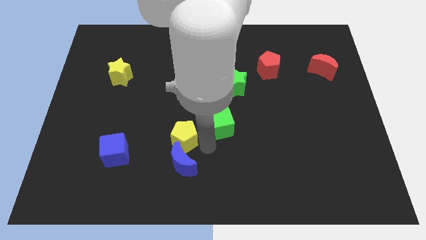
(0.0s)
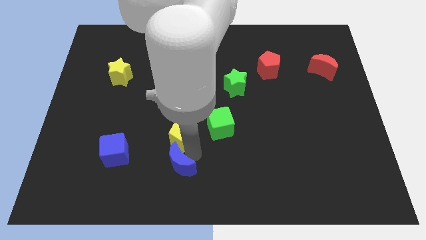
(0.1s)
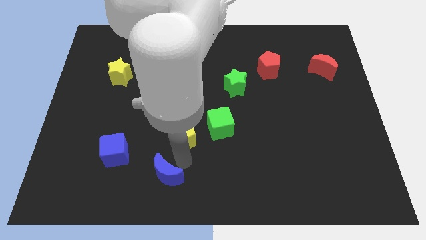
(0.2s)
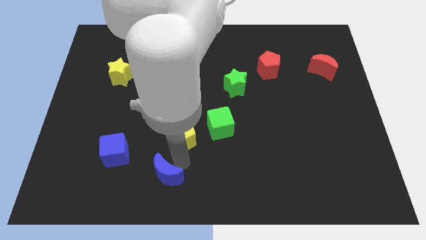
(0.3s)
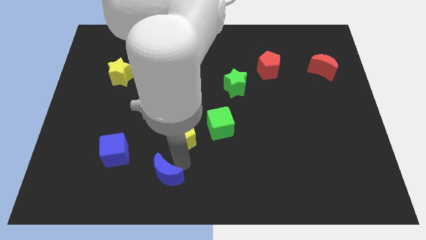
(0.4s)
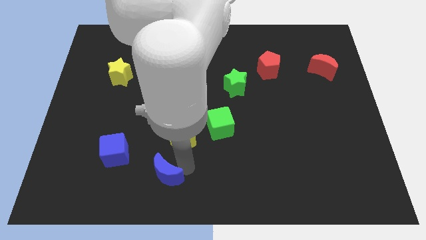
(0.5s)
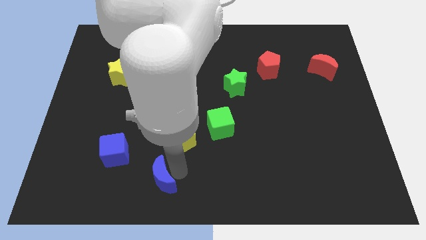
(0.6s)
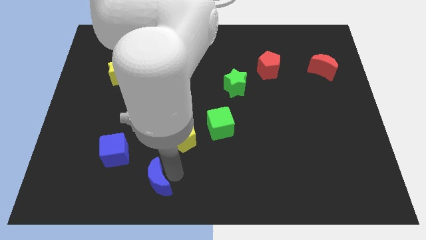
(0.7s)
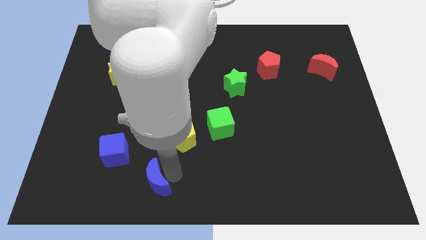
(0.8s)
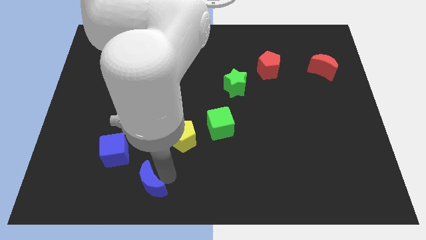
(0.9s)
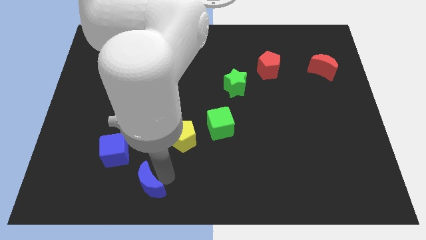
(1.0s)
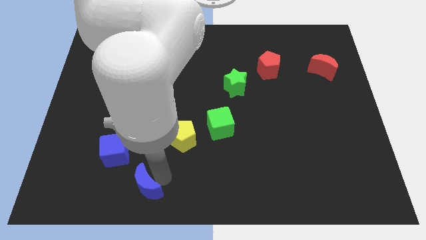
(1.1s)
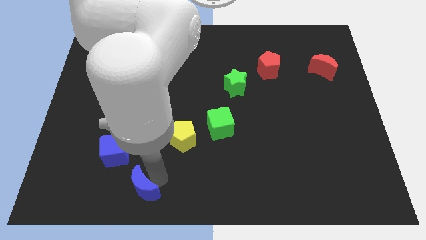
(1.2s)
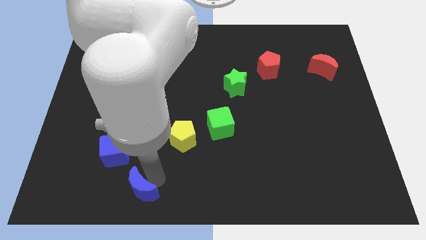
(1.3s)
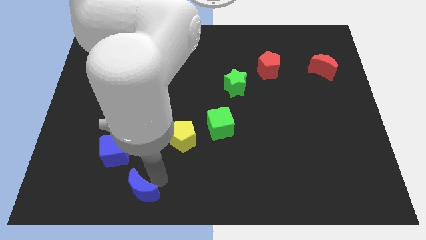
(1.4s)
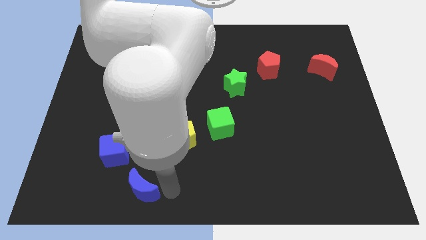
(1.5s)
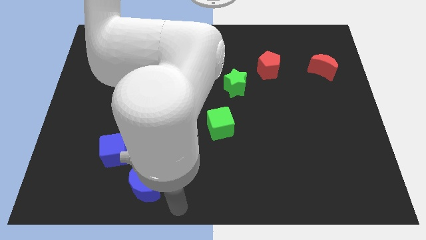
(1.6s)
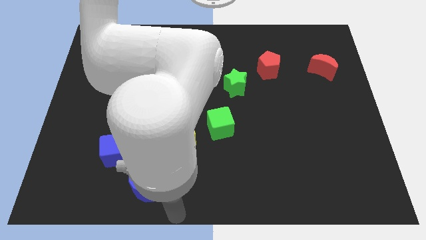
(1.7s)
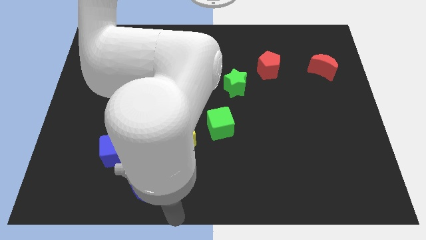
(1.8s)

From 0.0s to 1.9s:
push the blue crescent towards the left side of the board

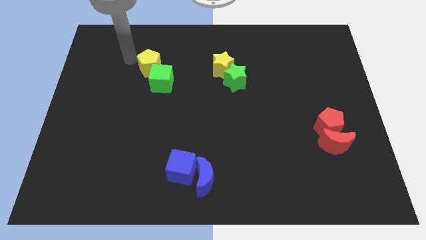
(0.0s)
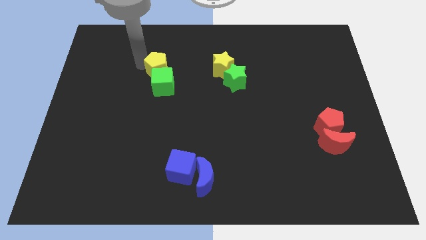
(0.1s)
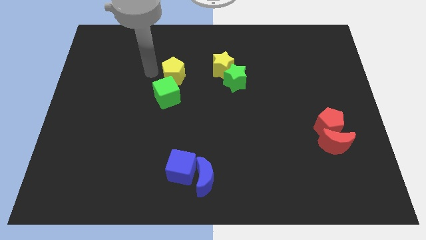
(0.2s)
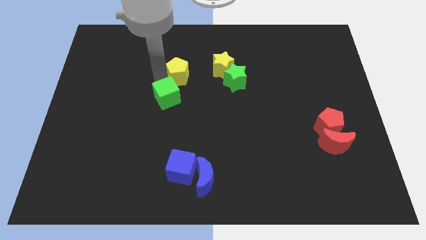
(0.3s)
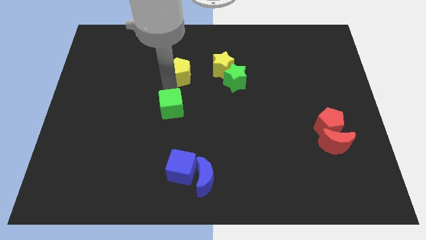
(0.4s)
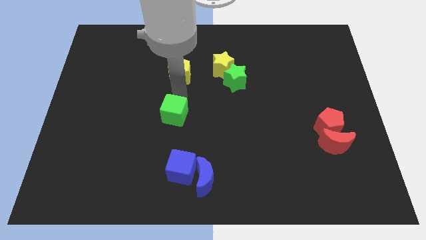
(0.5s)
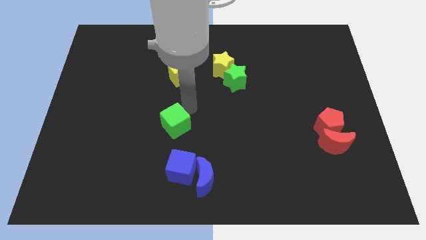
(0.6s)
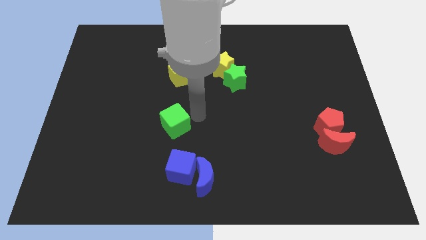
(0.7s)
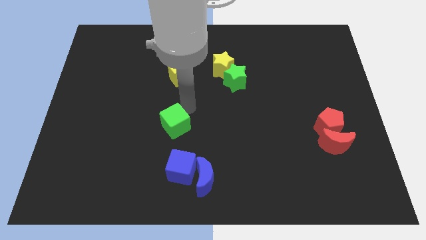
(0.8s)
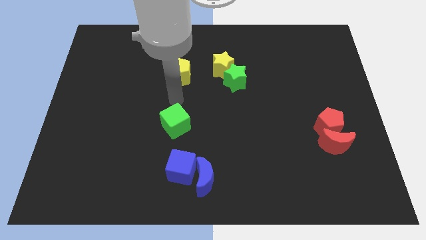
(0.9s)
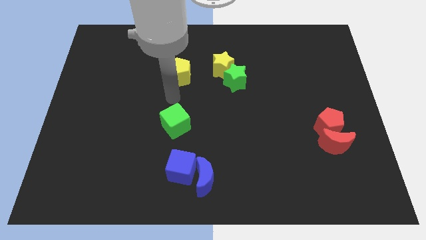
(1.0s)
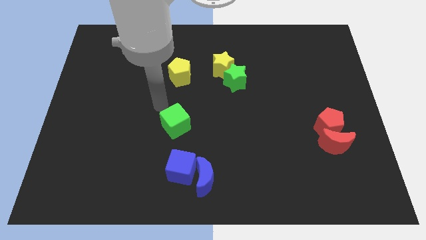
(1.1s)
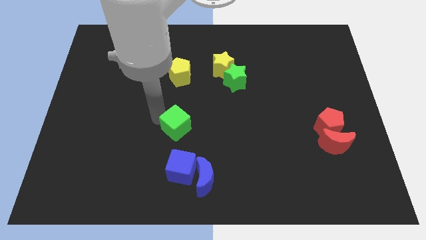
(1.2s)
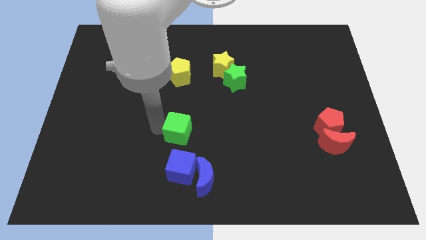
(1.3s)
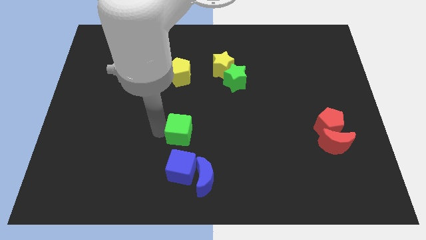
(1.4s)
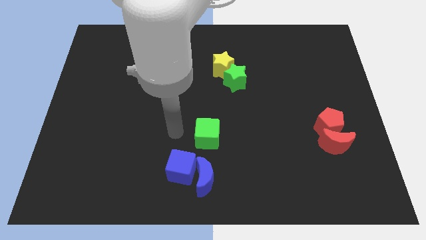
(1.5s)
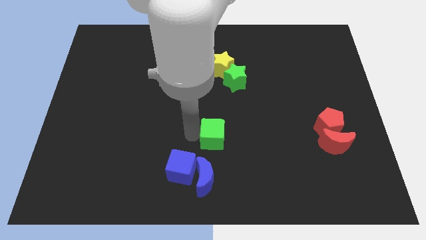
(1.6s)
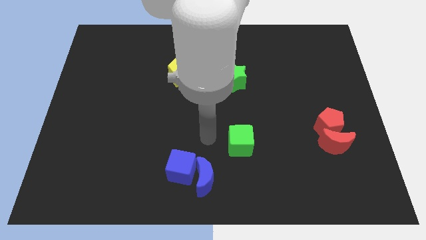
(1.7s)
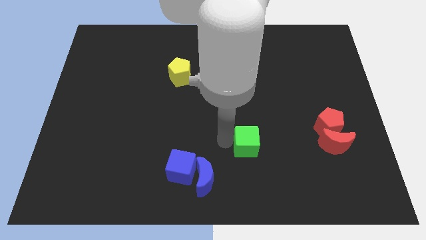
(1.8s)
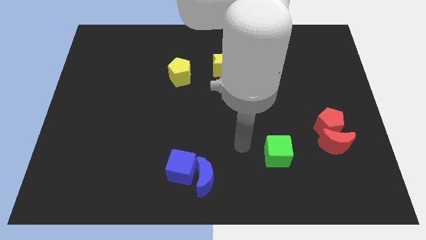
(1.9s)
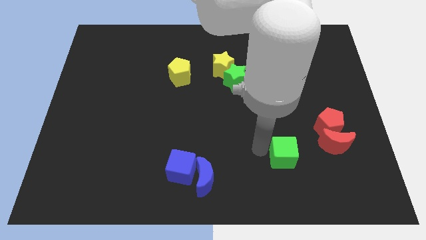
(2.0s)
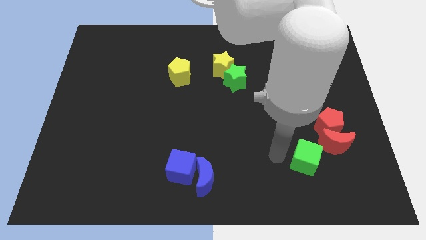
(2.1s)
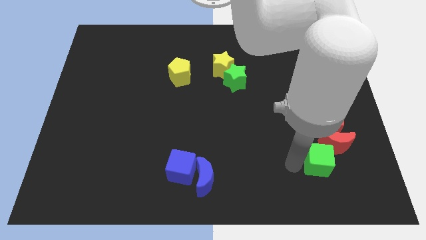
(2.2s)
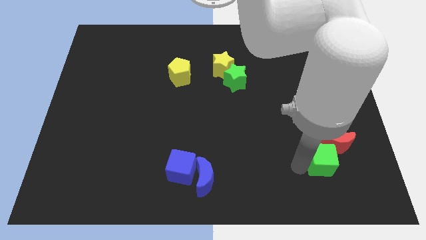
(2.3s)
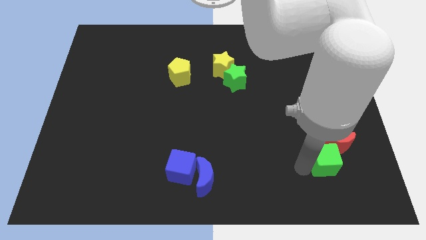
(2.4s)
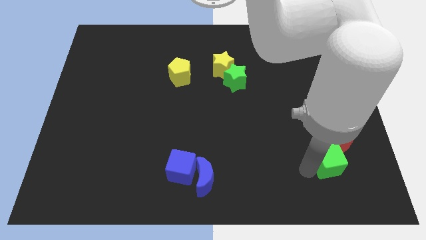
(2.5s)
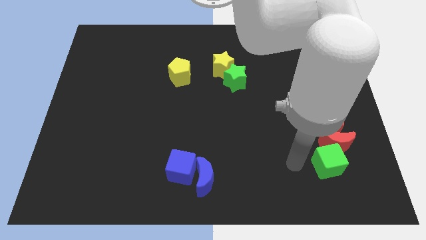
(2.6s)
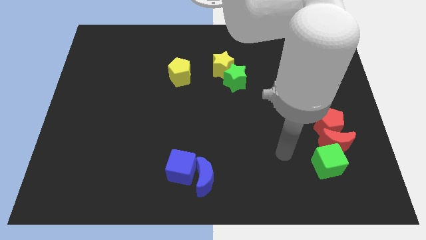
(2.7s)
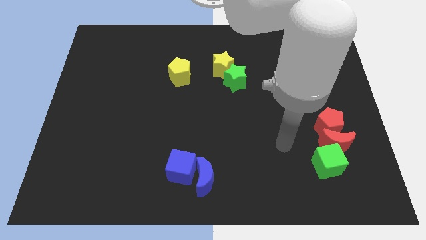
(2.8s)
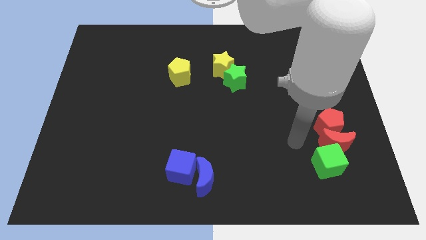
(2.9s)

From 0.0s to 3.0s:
place the green cube below to the red crescent

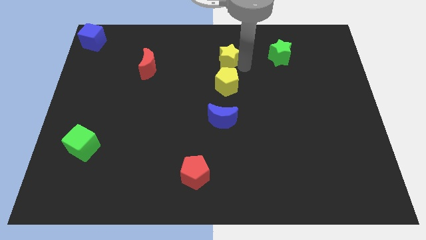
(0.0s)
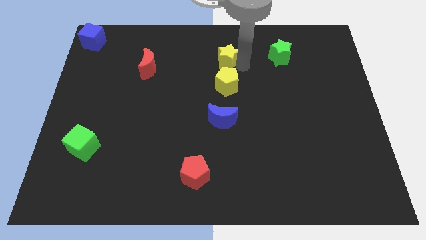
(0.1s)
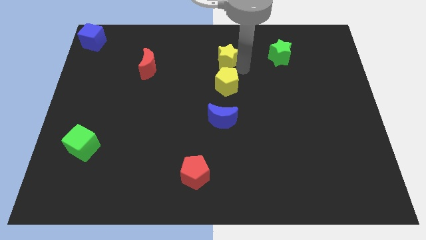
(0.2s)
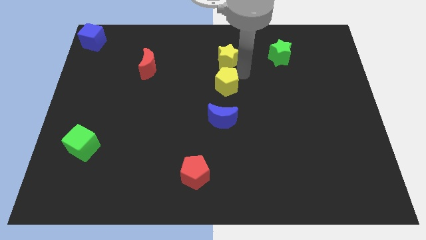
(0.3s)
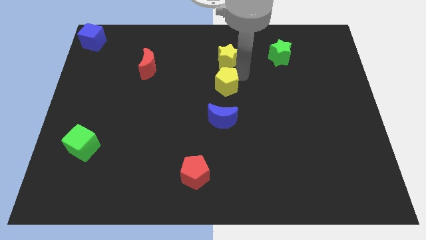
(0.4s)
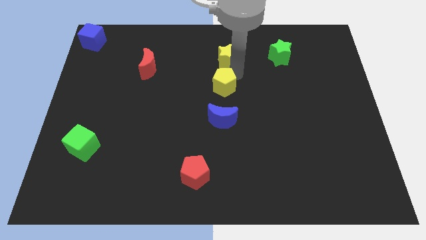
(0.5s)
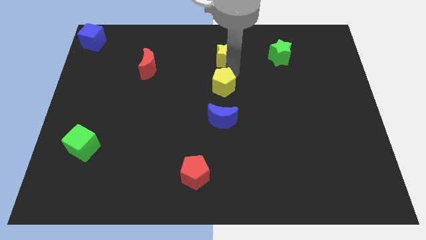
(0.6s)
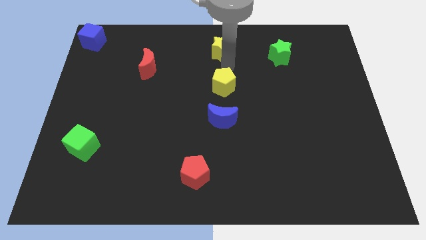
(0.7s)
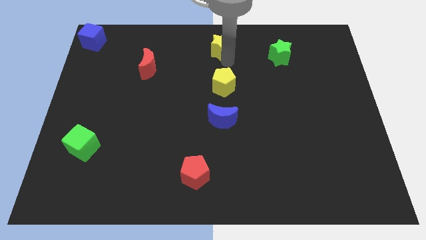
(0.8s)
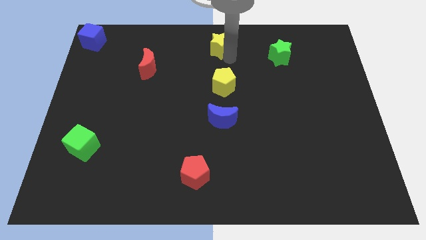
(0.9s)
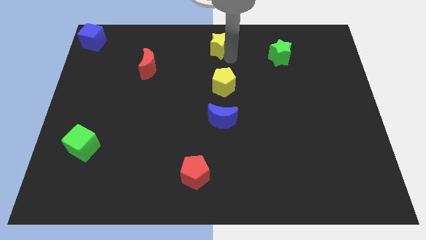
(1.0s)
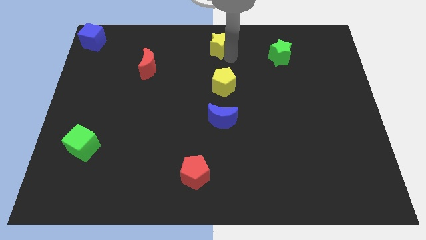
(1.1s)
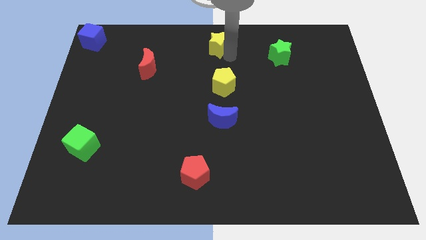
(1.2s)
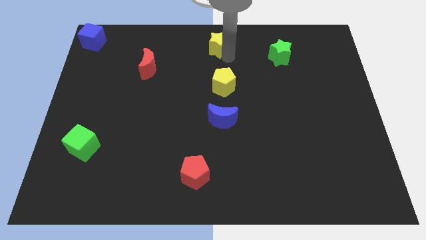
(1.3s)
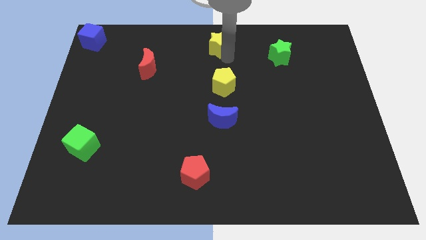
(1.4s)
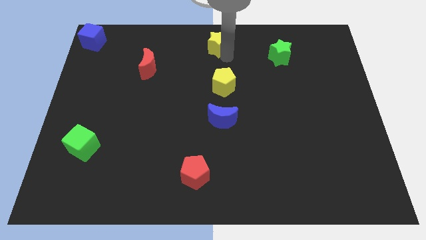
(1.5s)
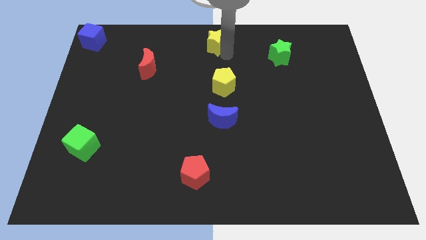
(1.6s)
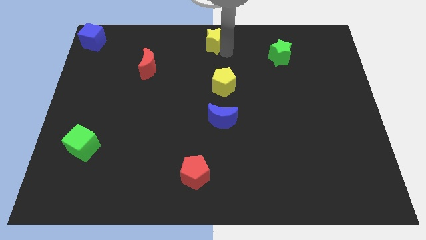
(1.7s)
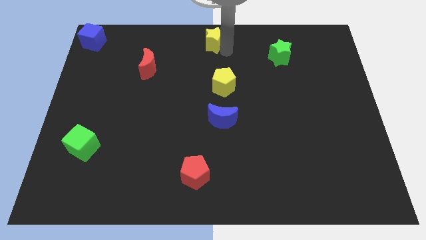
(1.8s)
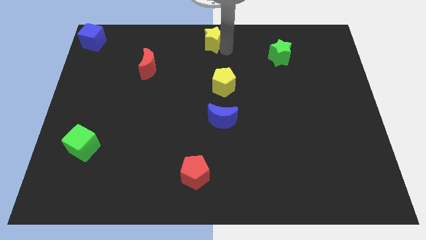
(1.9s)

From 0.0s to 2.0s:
place the yellow star towards the top center of the board

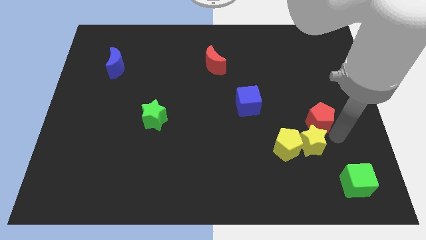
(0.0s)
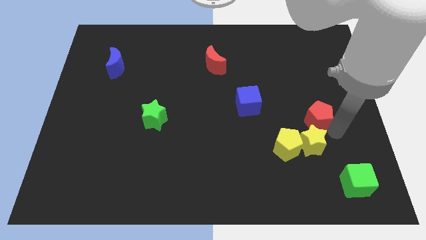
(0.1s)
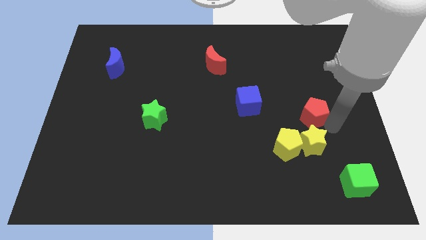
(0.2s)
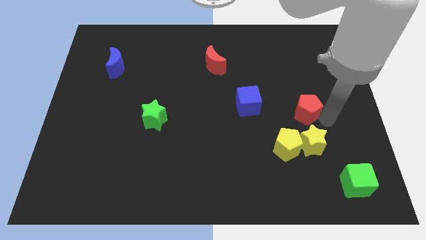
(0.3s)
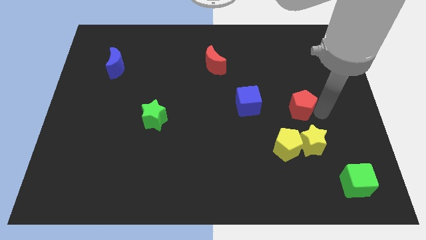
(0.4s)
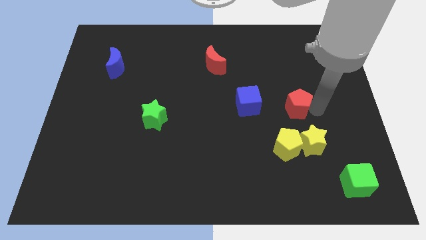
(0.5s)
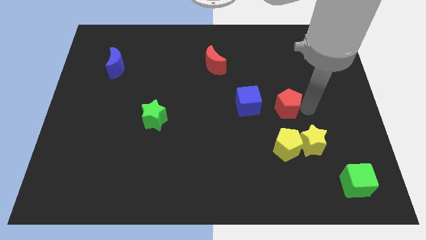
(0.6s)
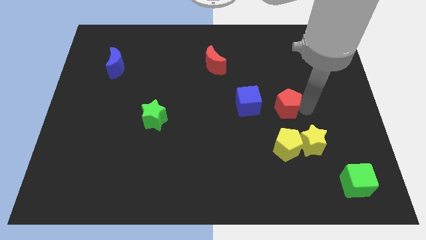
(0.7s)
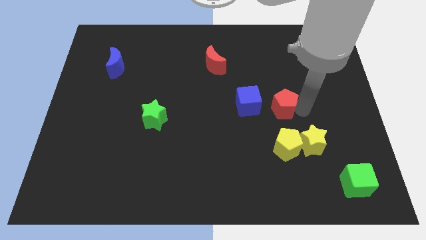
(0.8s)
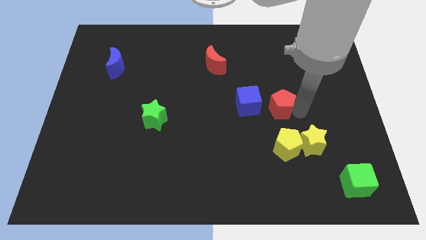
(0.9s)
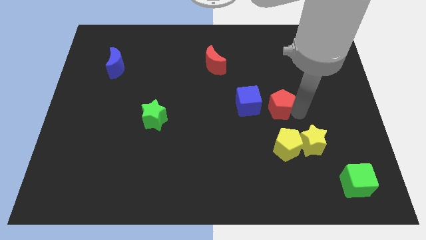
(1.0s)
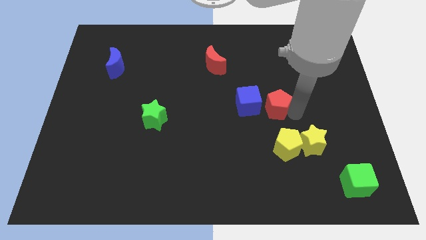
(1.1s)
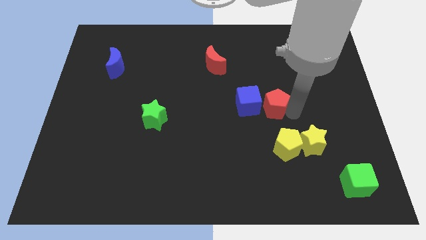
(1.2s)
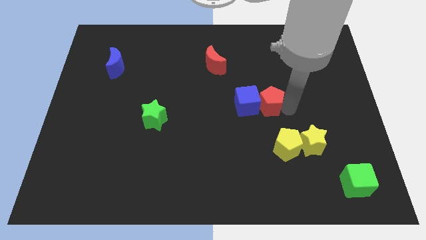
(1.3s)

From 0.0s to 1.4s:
place the red pentagon to the right side of the blue cube

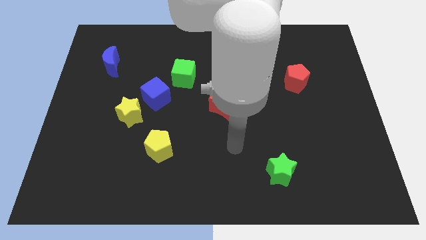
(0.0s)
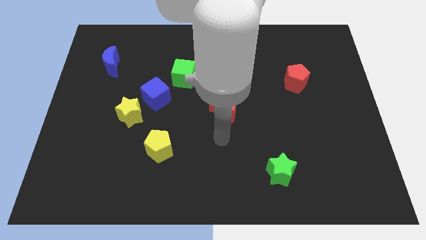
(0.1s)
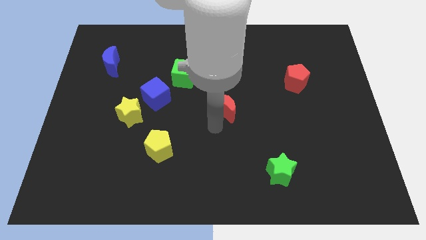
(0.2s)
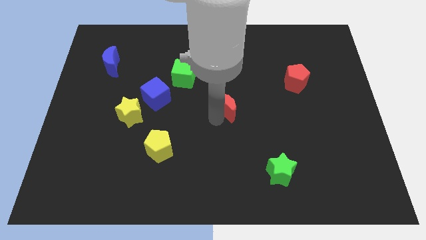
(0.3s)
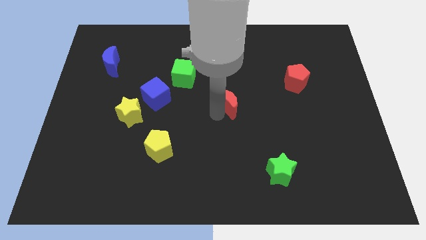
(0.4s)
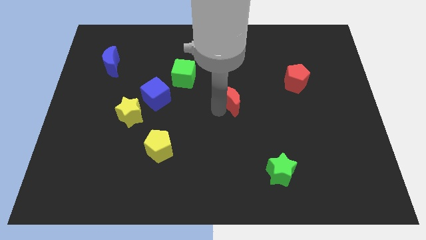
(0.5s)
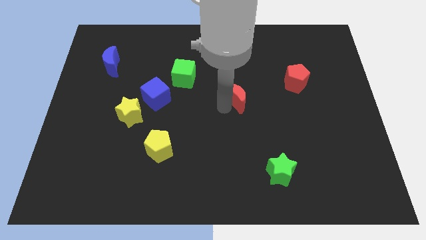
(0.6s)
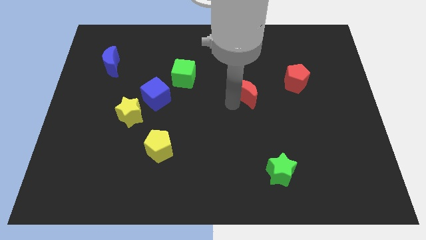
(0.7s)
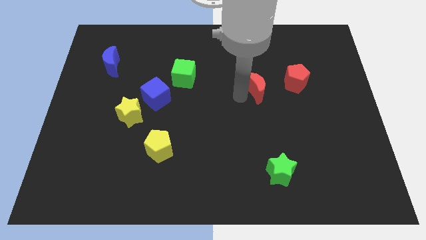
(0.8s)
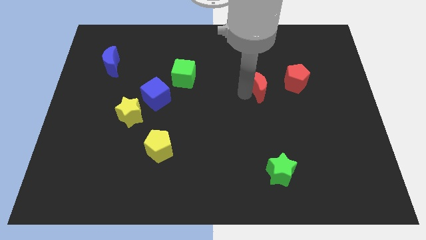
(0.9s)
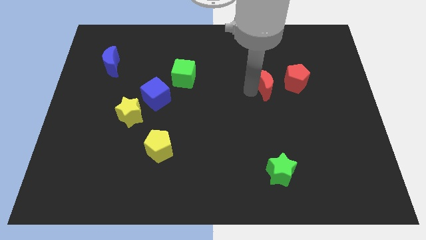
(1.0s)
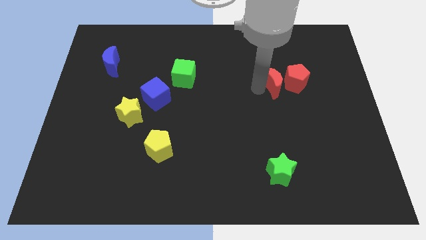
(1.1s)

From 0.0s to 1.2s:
push the red moon towards the red pentagon
